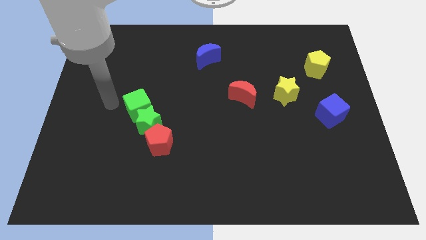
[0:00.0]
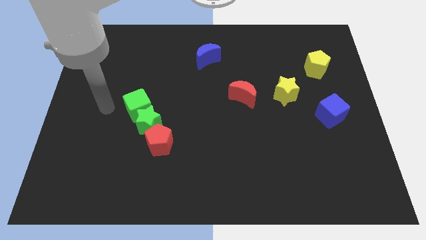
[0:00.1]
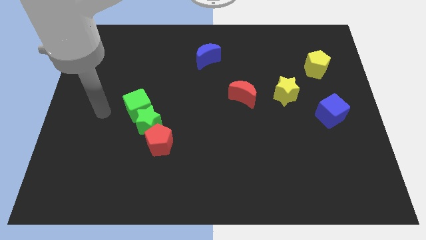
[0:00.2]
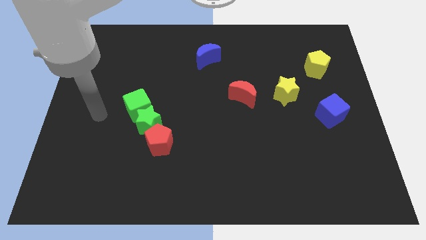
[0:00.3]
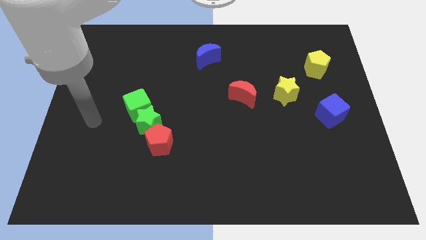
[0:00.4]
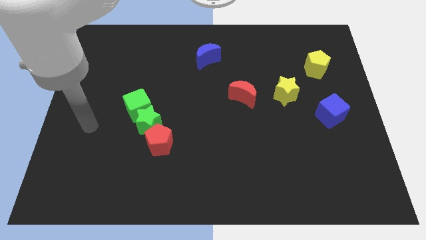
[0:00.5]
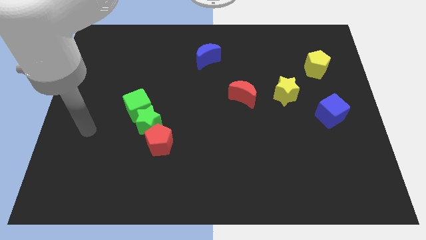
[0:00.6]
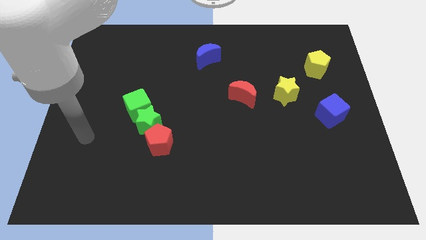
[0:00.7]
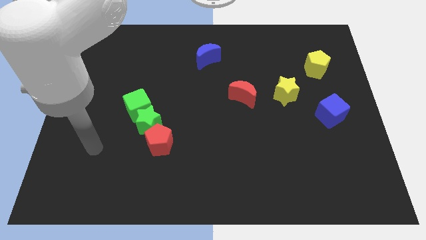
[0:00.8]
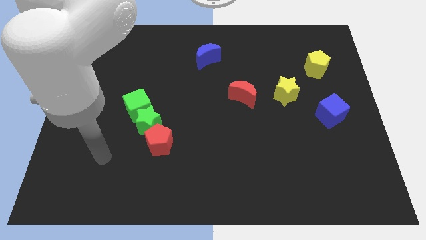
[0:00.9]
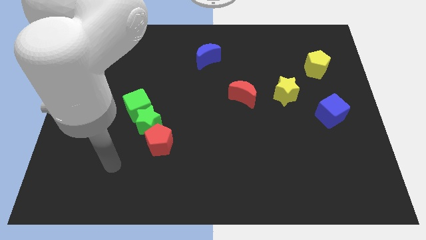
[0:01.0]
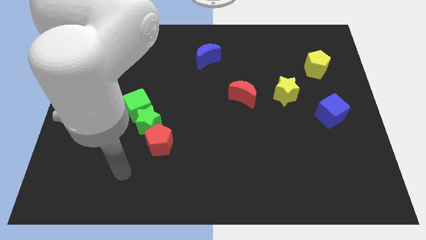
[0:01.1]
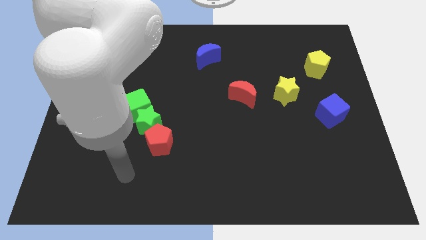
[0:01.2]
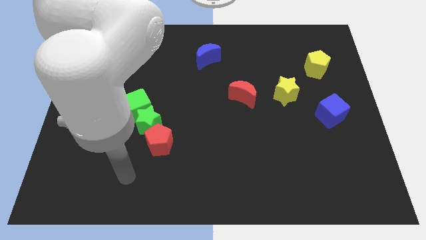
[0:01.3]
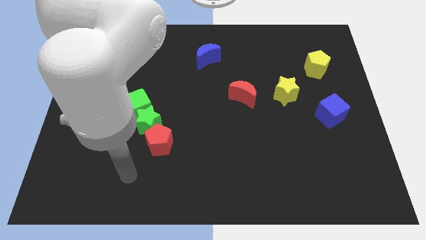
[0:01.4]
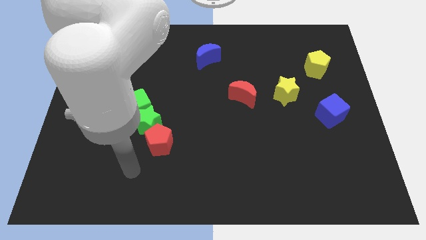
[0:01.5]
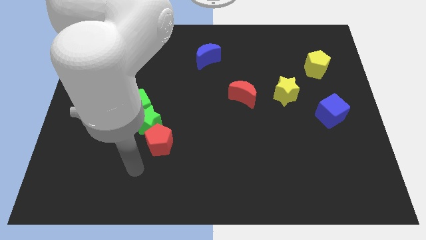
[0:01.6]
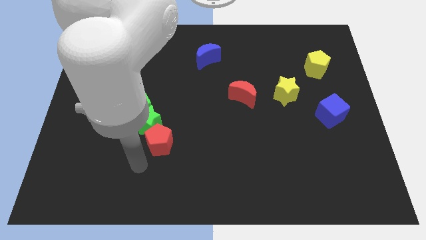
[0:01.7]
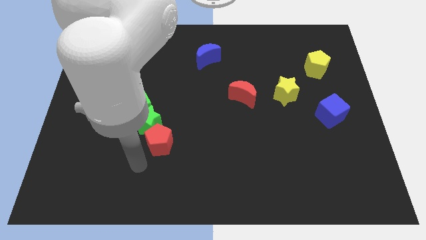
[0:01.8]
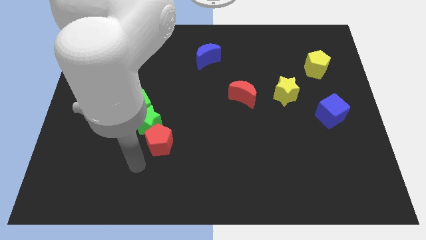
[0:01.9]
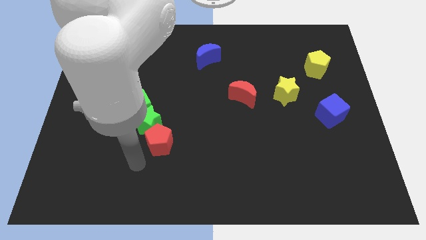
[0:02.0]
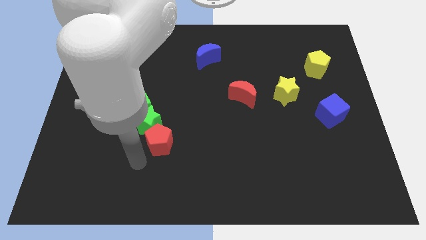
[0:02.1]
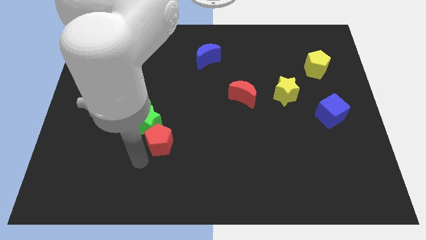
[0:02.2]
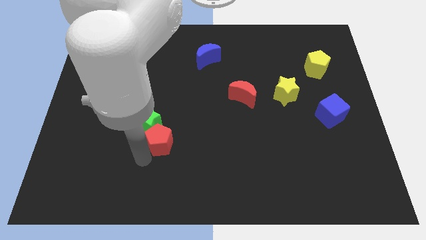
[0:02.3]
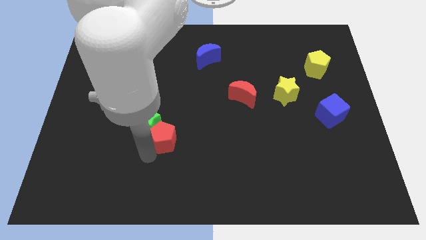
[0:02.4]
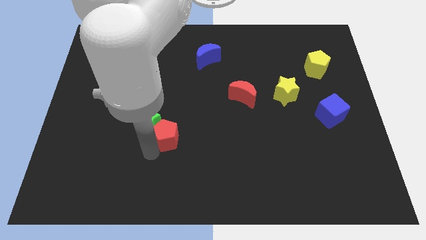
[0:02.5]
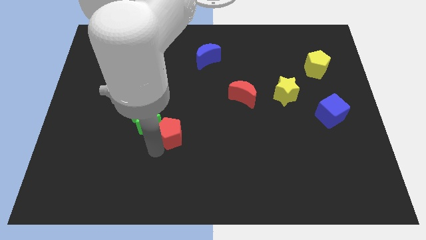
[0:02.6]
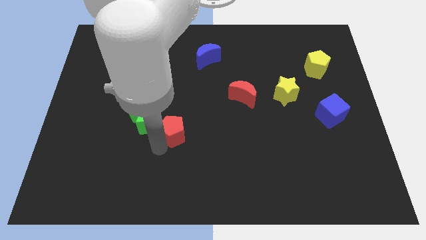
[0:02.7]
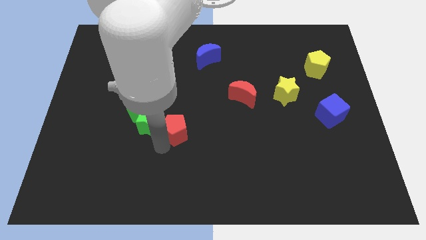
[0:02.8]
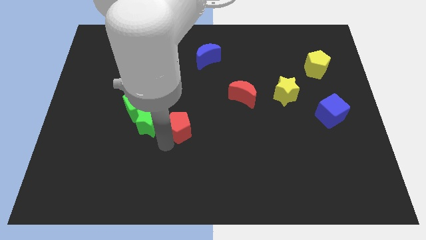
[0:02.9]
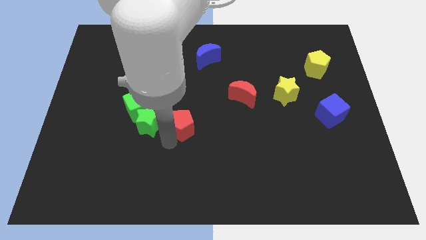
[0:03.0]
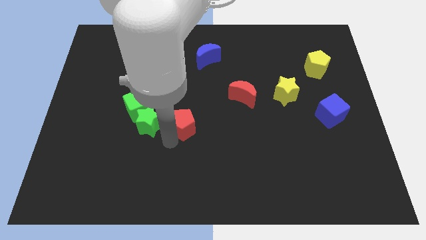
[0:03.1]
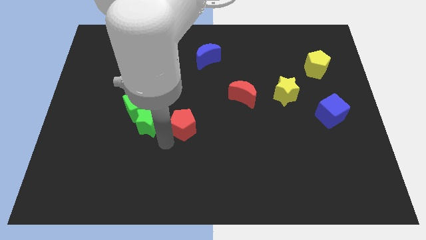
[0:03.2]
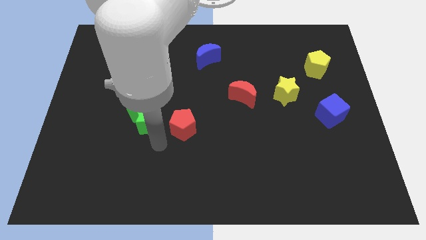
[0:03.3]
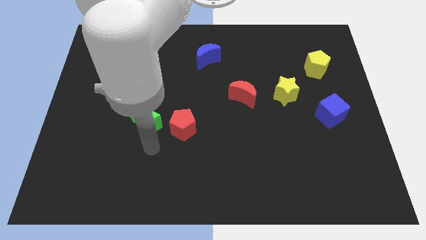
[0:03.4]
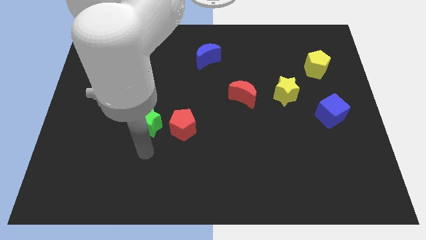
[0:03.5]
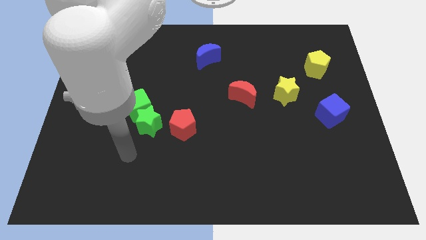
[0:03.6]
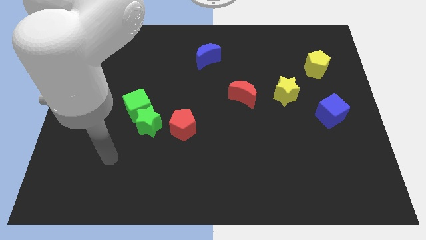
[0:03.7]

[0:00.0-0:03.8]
separate the green star and red pentagon

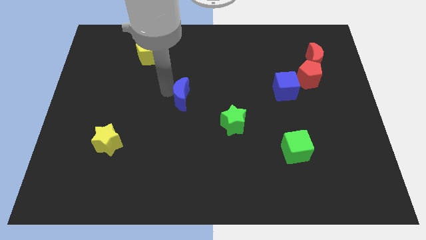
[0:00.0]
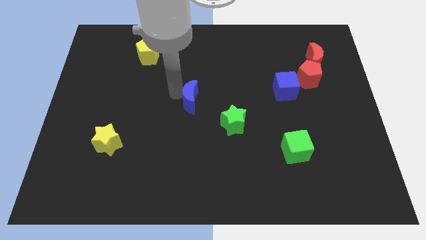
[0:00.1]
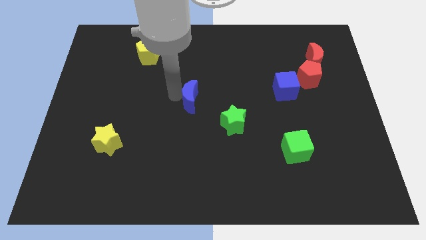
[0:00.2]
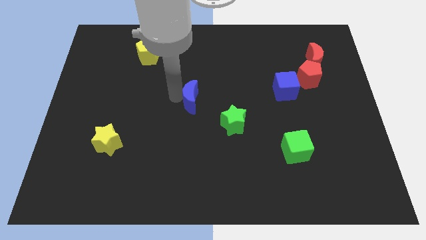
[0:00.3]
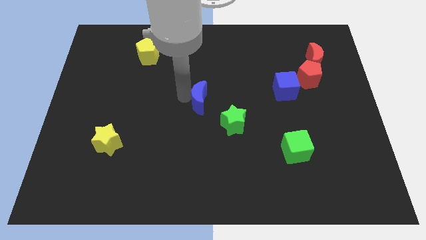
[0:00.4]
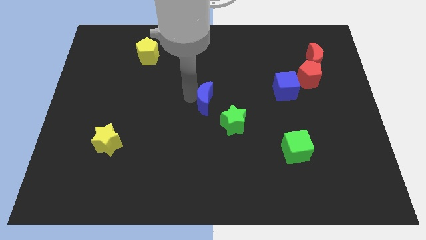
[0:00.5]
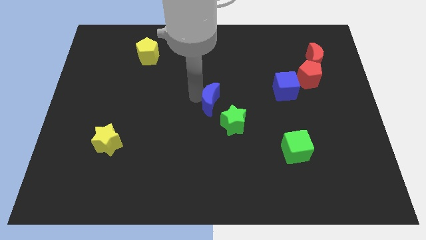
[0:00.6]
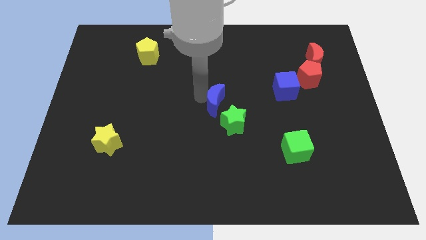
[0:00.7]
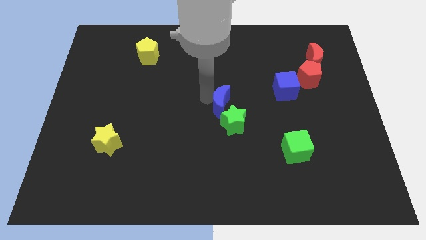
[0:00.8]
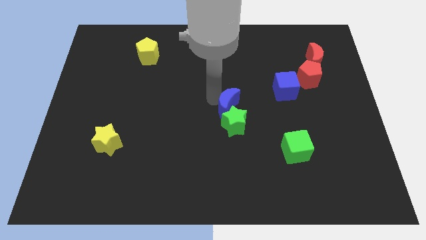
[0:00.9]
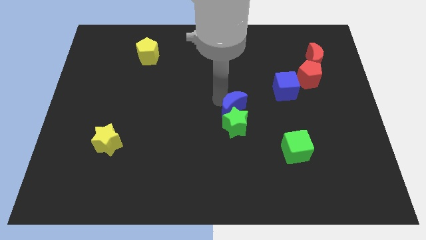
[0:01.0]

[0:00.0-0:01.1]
push the blue crescent on top of the green star

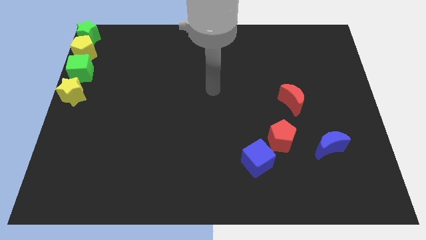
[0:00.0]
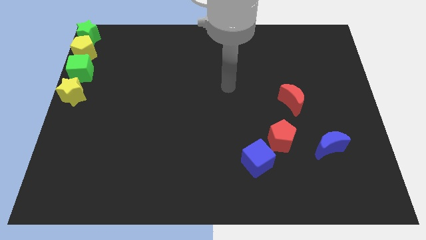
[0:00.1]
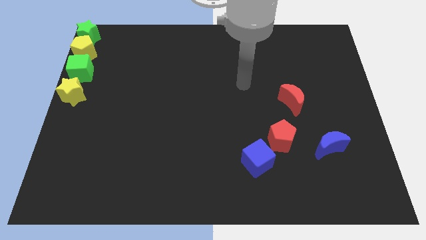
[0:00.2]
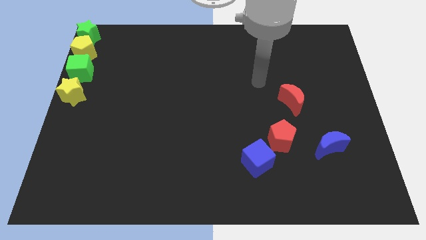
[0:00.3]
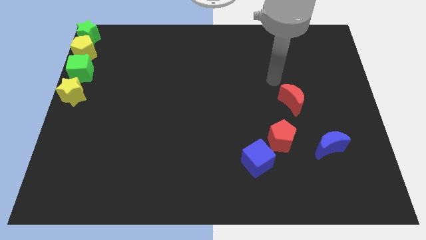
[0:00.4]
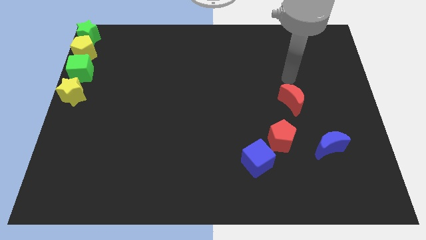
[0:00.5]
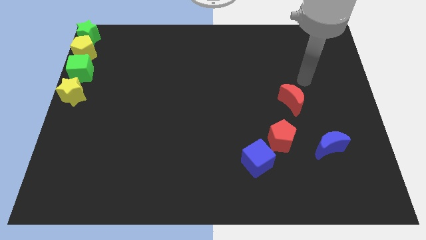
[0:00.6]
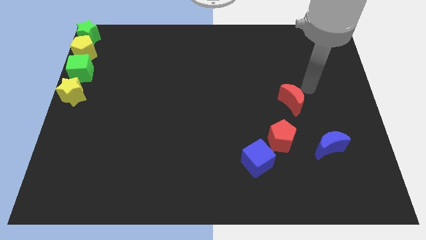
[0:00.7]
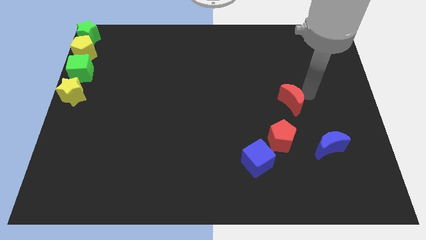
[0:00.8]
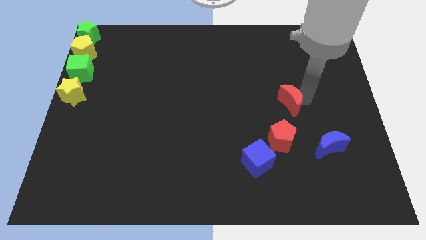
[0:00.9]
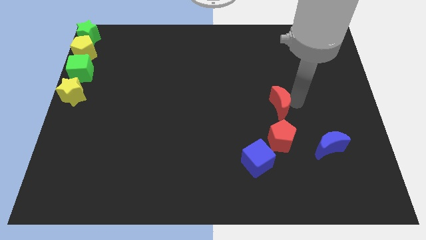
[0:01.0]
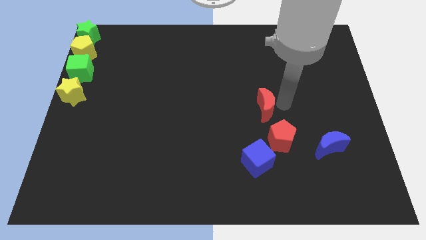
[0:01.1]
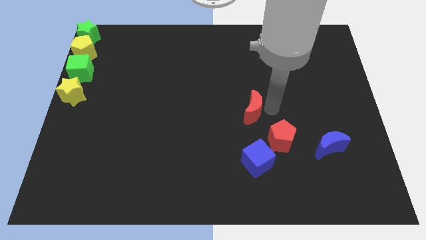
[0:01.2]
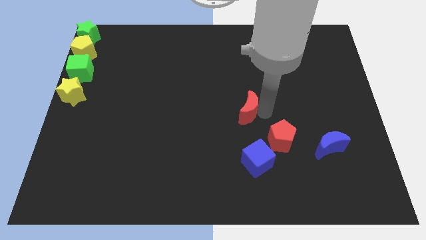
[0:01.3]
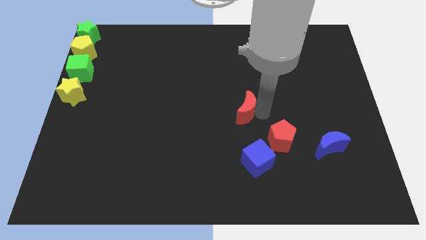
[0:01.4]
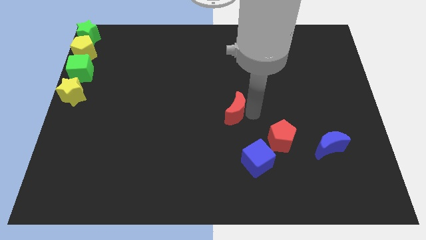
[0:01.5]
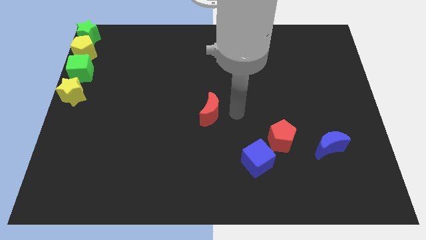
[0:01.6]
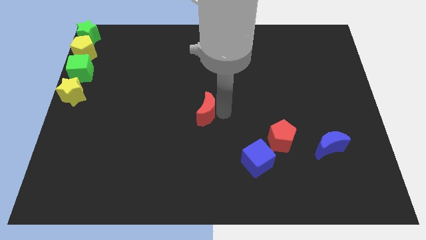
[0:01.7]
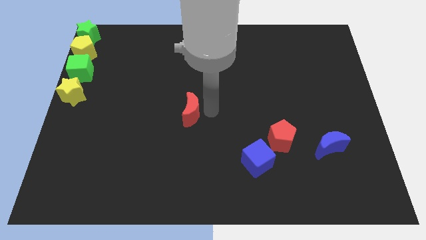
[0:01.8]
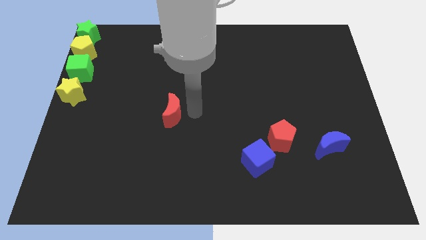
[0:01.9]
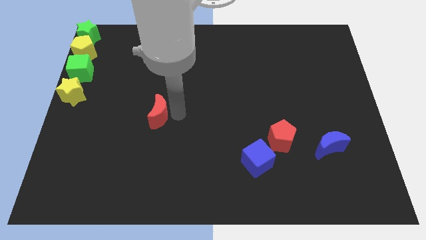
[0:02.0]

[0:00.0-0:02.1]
place the red moon diagonal left above to the blue cube

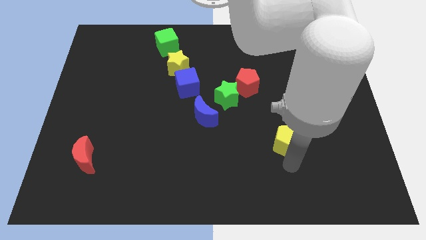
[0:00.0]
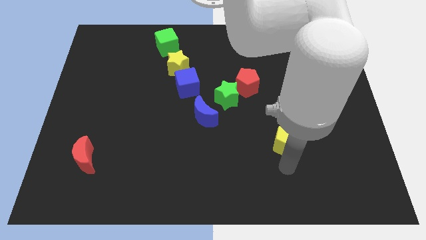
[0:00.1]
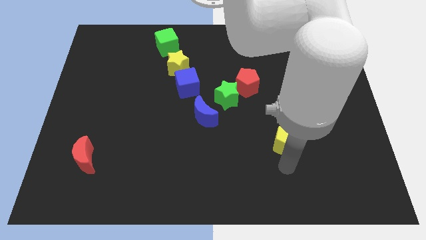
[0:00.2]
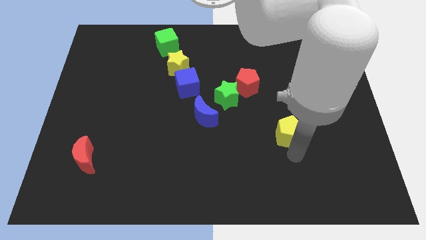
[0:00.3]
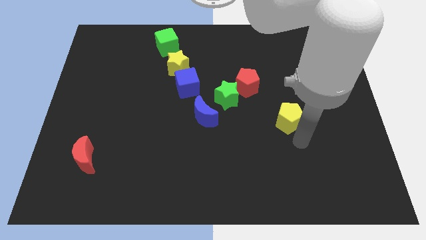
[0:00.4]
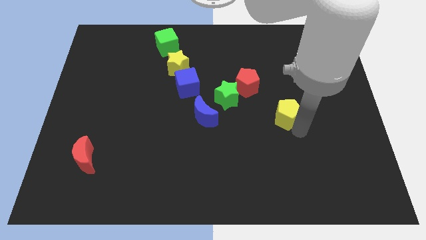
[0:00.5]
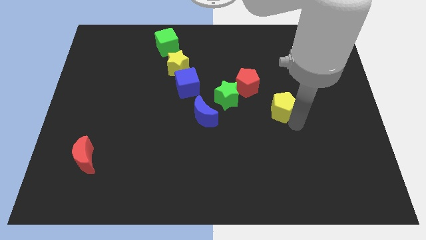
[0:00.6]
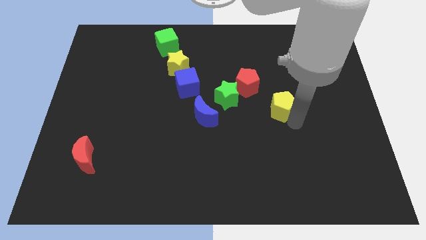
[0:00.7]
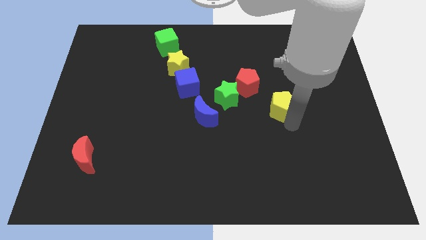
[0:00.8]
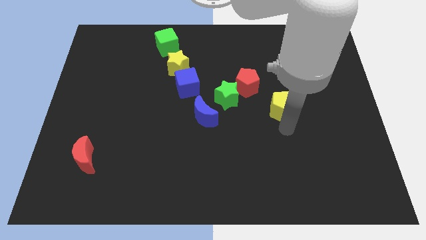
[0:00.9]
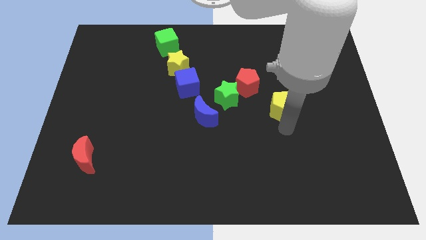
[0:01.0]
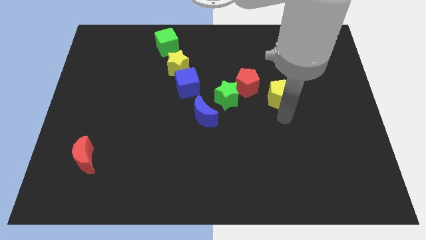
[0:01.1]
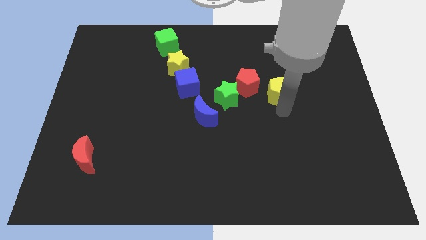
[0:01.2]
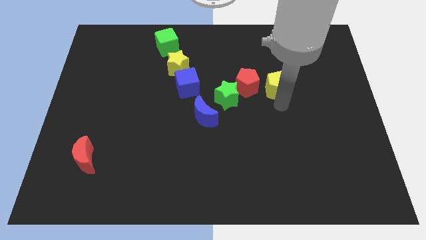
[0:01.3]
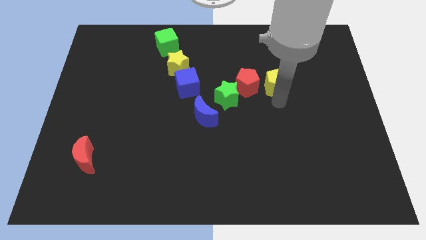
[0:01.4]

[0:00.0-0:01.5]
move the yellow pentagon to the right of the red pentagon

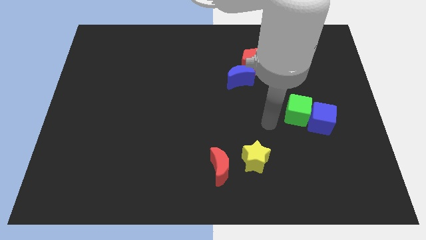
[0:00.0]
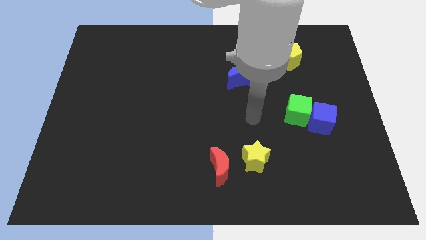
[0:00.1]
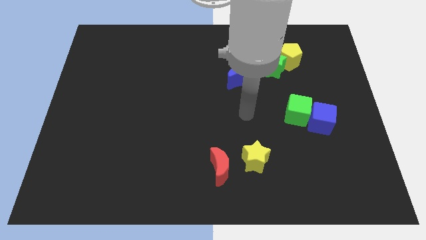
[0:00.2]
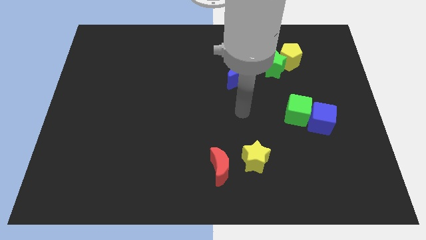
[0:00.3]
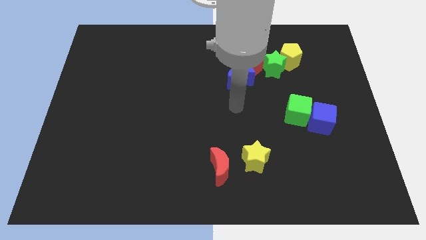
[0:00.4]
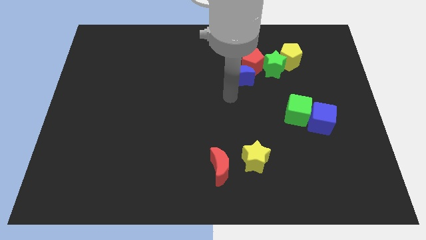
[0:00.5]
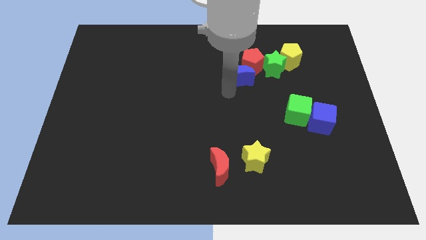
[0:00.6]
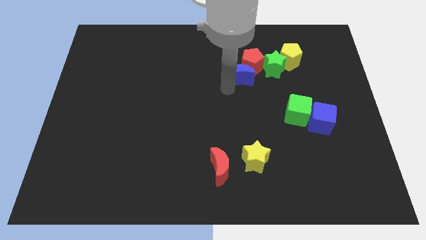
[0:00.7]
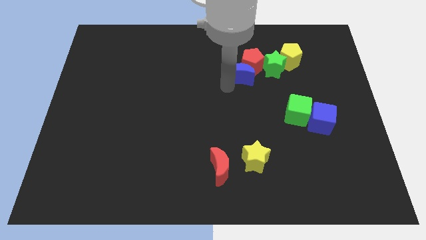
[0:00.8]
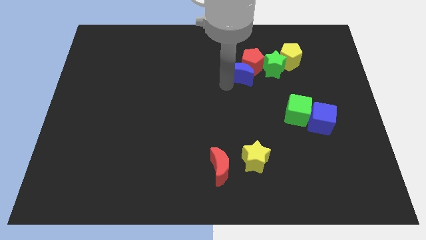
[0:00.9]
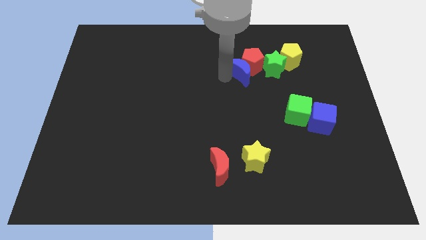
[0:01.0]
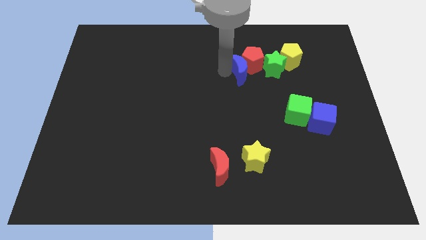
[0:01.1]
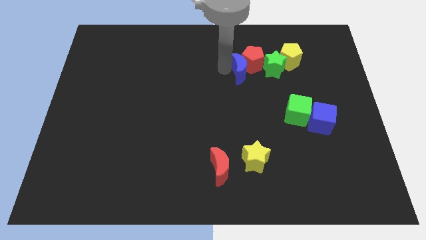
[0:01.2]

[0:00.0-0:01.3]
push the blue moon into the red pentagon
